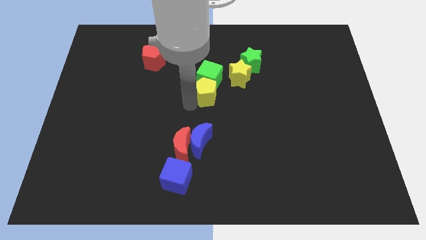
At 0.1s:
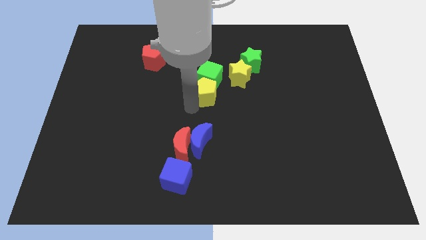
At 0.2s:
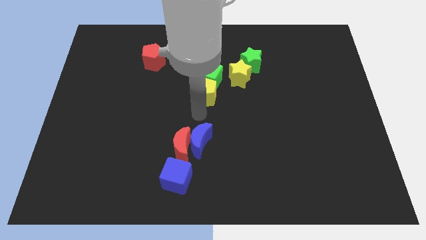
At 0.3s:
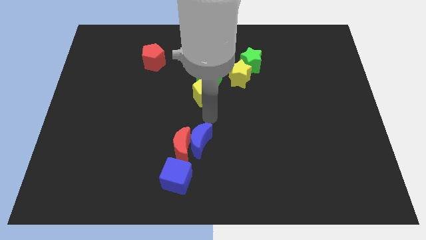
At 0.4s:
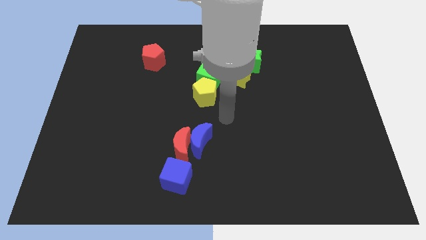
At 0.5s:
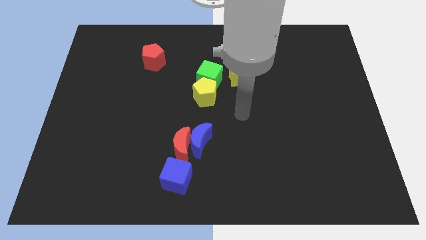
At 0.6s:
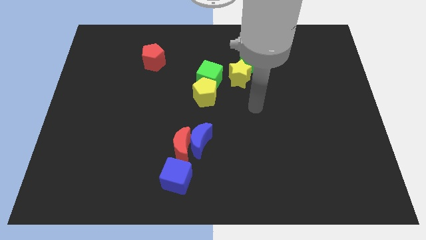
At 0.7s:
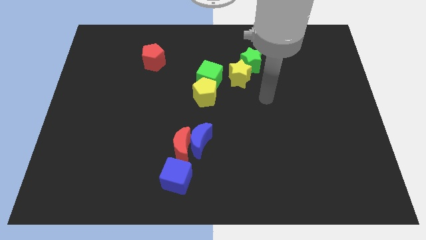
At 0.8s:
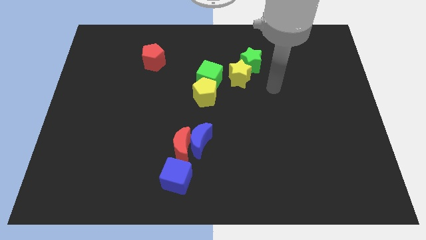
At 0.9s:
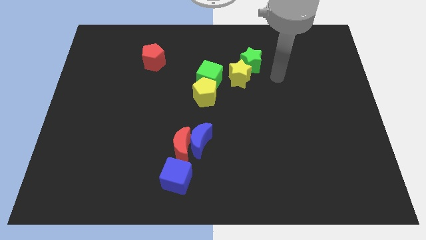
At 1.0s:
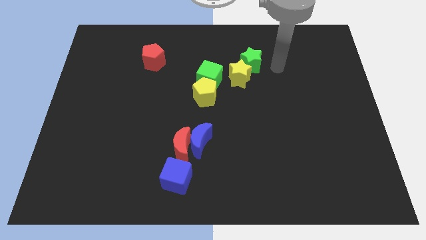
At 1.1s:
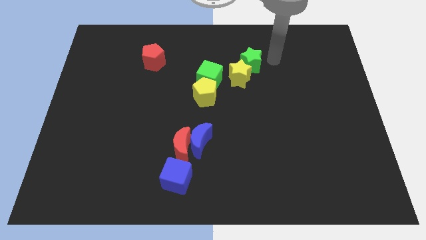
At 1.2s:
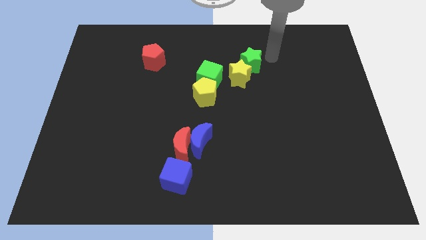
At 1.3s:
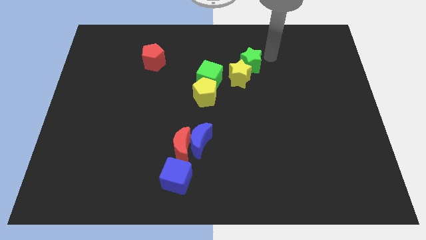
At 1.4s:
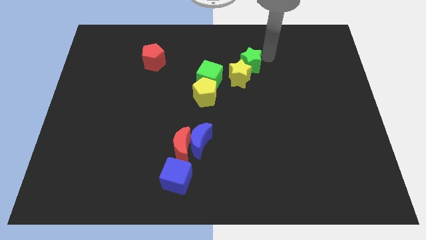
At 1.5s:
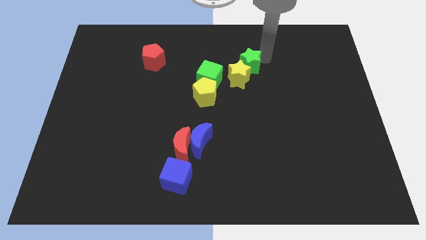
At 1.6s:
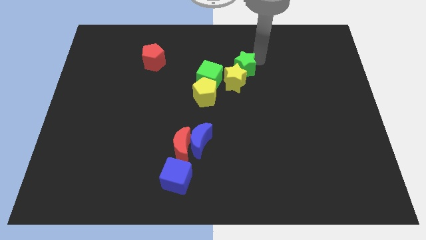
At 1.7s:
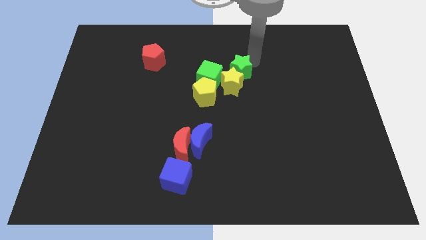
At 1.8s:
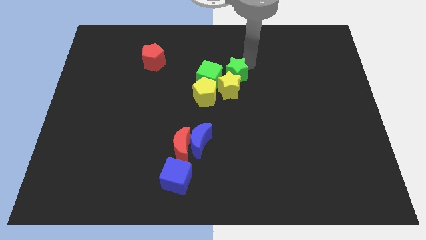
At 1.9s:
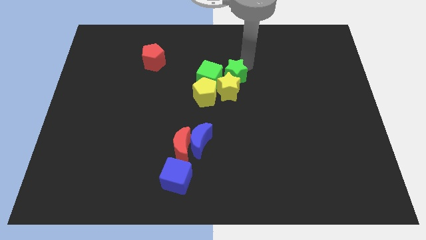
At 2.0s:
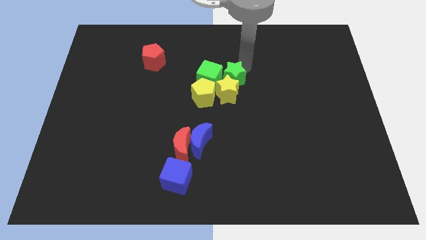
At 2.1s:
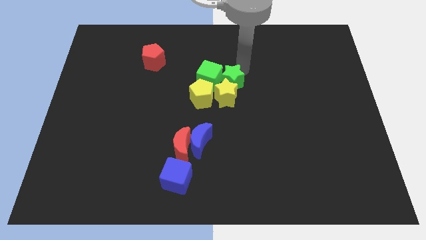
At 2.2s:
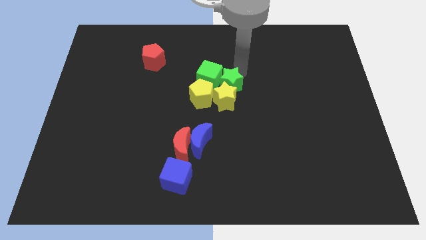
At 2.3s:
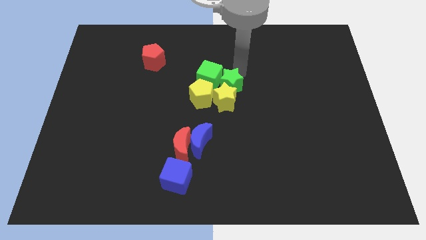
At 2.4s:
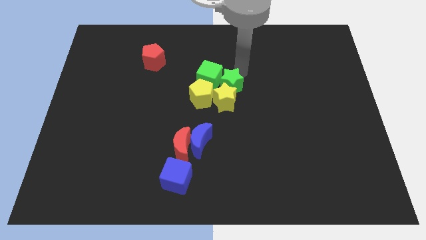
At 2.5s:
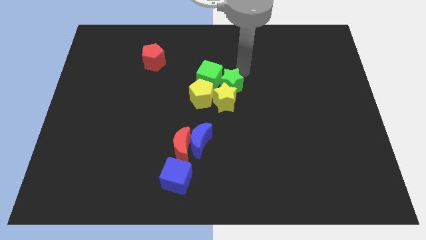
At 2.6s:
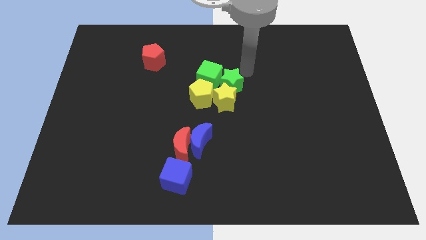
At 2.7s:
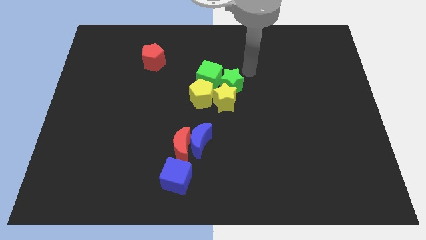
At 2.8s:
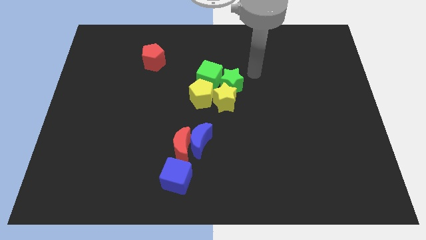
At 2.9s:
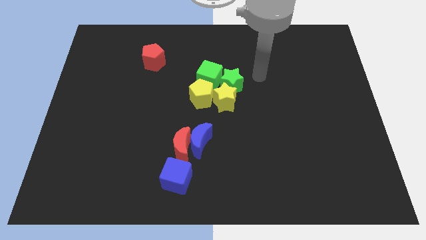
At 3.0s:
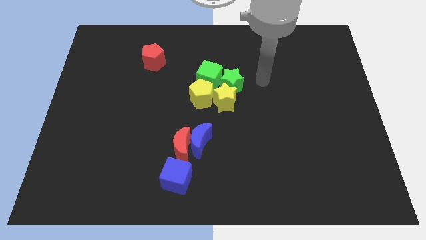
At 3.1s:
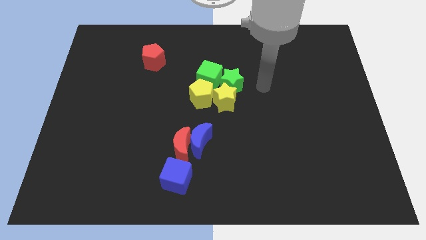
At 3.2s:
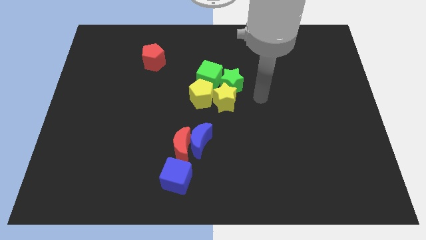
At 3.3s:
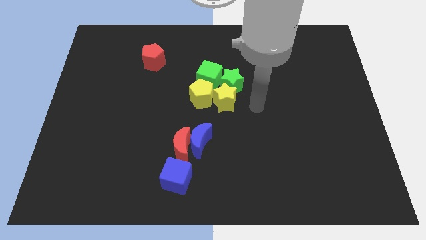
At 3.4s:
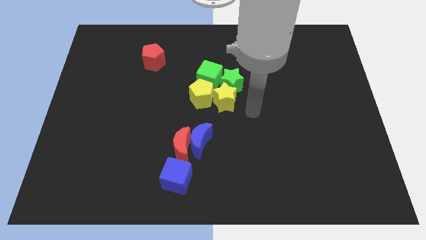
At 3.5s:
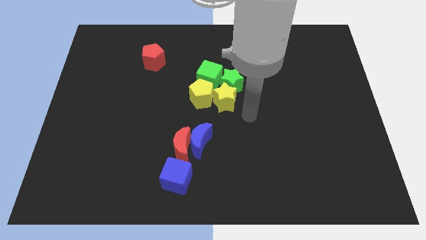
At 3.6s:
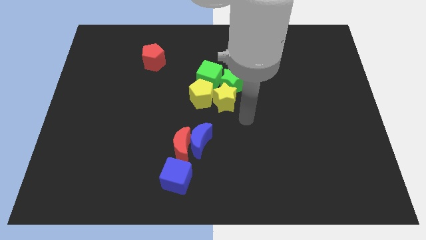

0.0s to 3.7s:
move the yellow star and green star to the right side of the yellow pentagon and green cube

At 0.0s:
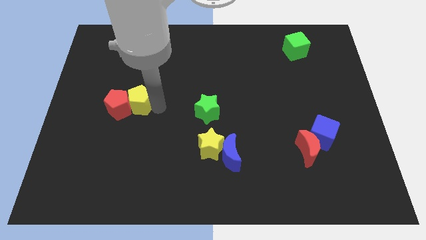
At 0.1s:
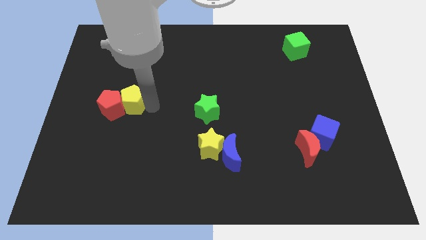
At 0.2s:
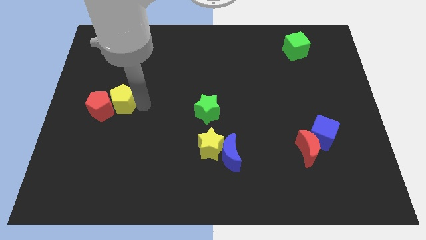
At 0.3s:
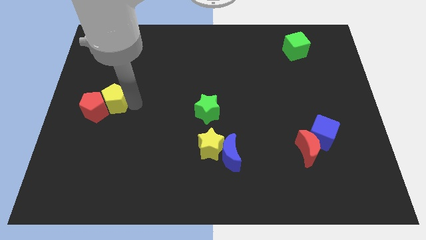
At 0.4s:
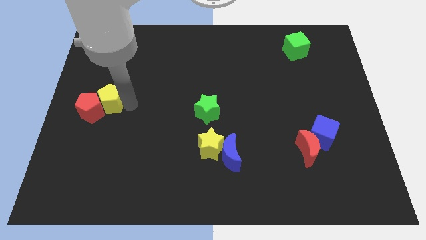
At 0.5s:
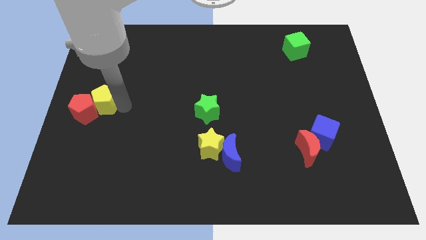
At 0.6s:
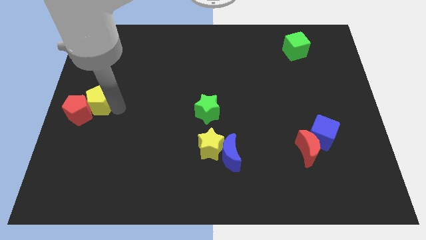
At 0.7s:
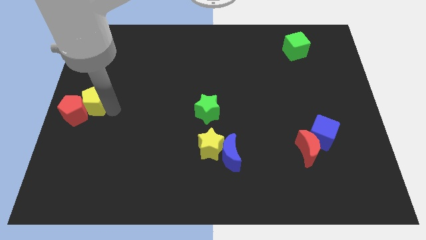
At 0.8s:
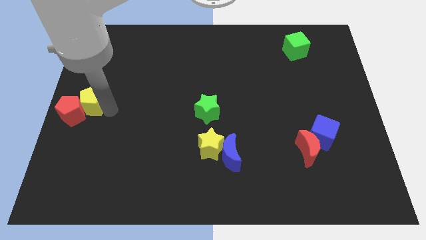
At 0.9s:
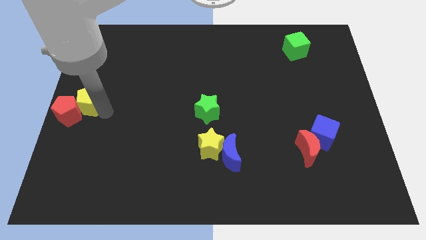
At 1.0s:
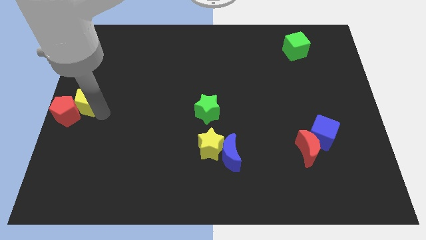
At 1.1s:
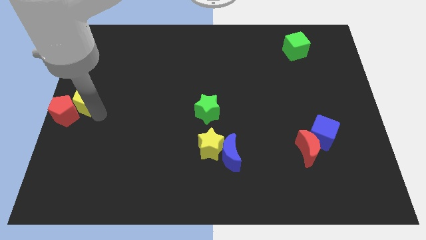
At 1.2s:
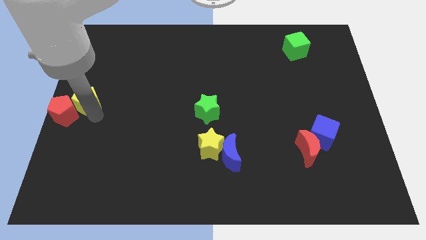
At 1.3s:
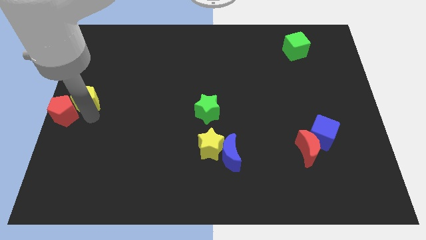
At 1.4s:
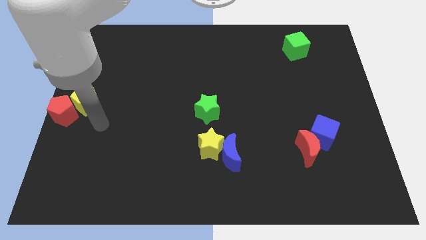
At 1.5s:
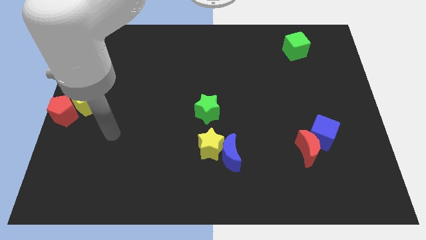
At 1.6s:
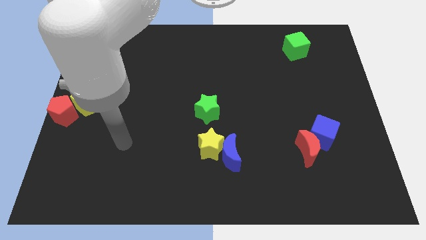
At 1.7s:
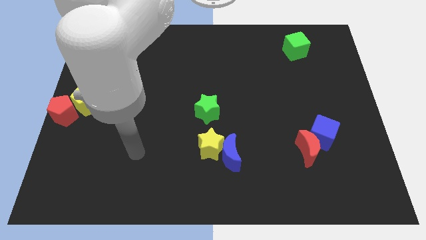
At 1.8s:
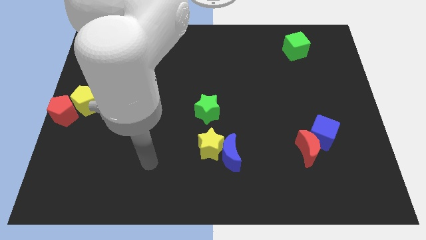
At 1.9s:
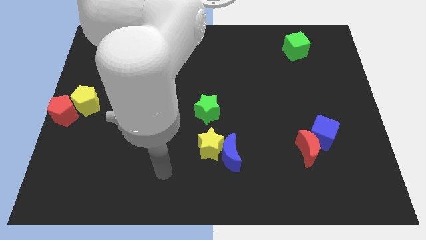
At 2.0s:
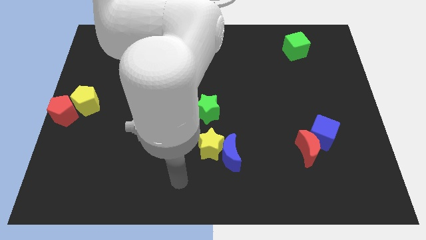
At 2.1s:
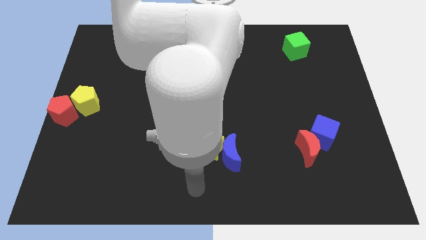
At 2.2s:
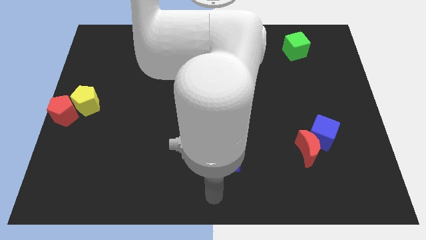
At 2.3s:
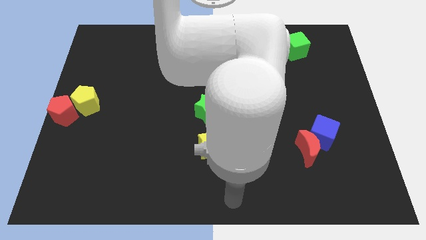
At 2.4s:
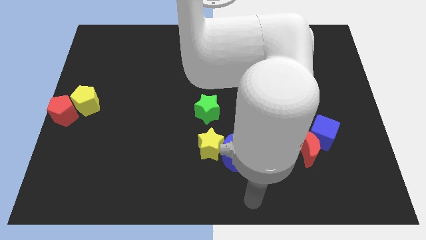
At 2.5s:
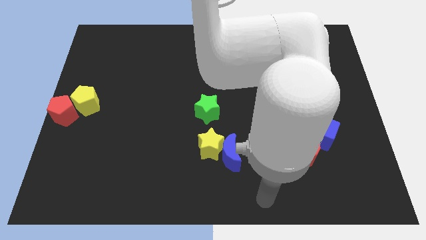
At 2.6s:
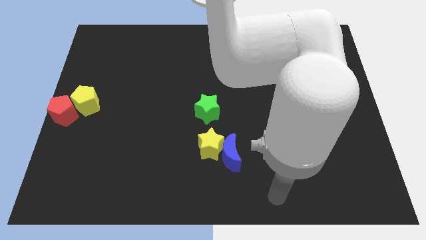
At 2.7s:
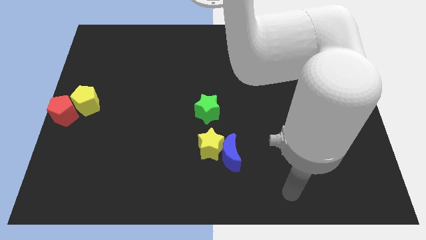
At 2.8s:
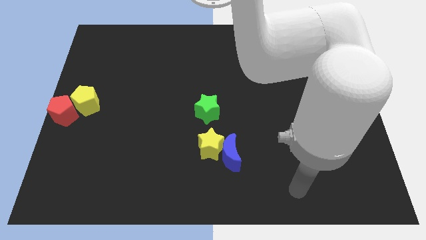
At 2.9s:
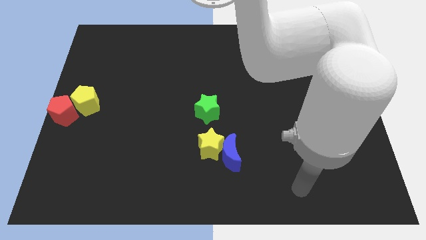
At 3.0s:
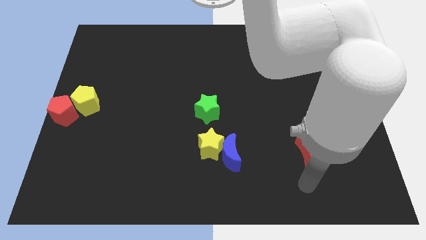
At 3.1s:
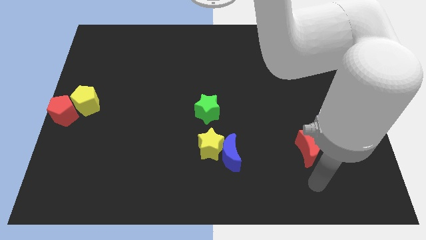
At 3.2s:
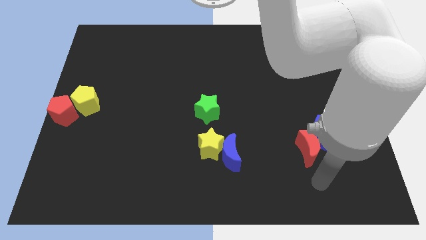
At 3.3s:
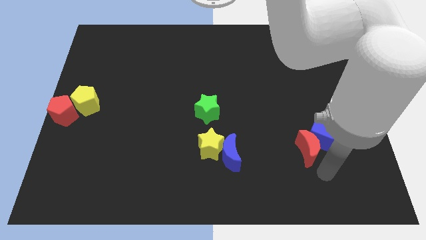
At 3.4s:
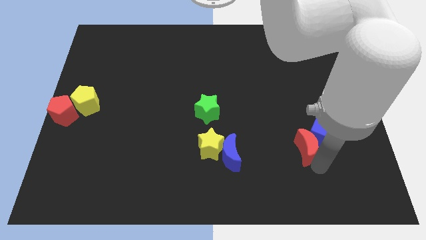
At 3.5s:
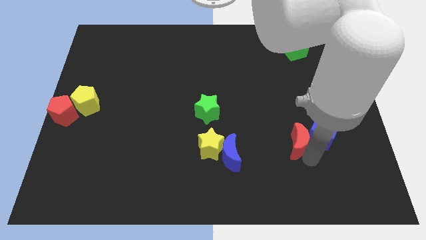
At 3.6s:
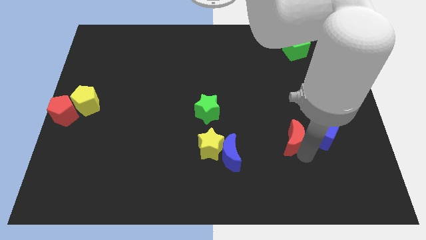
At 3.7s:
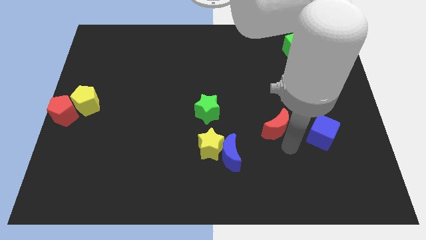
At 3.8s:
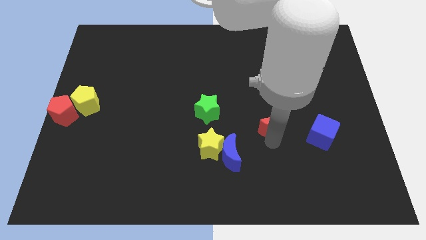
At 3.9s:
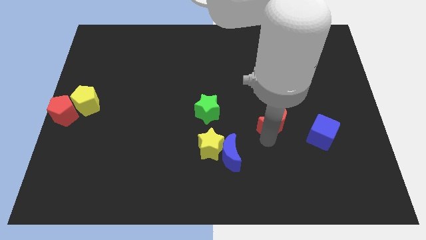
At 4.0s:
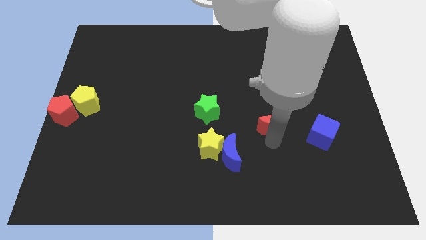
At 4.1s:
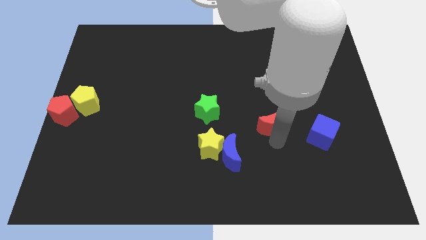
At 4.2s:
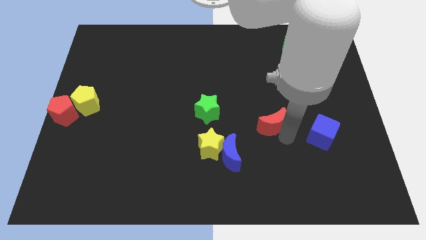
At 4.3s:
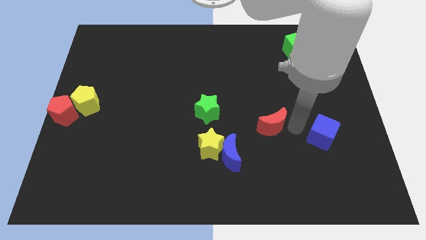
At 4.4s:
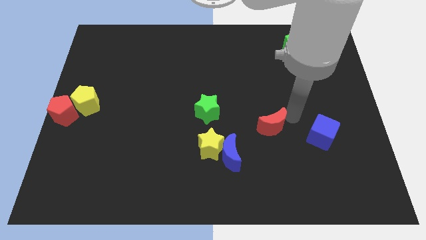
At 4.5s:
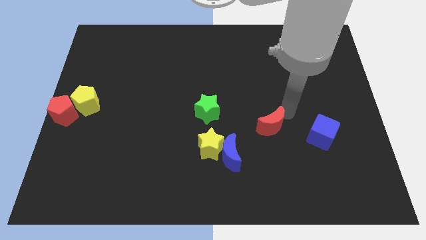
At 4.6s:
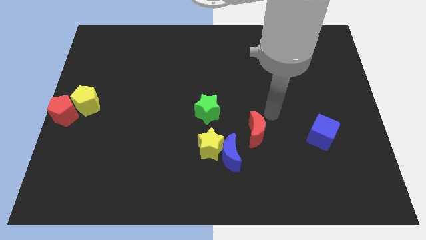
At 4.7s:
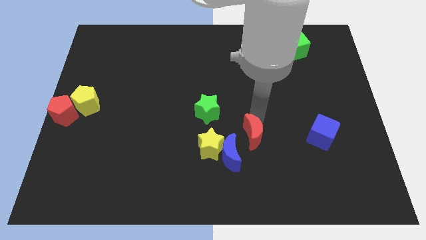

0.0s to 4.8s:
separate the red moon from the blue cube

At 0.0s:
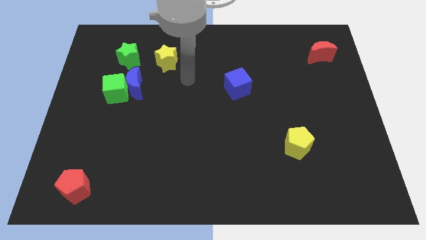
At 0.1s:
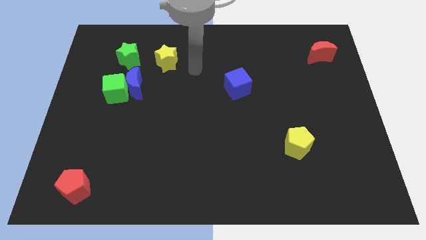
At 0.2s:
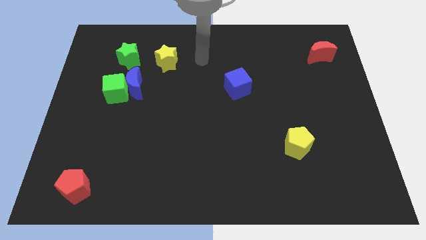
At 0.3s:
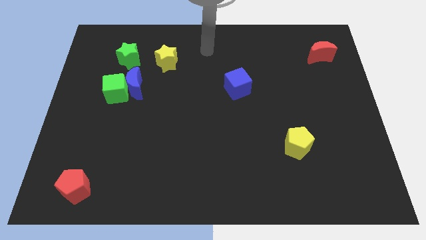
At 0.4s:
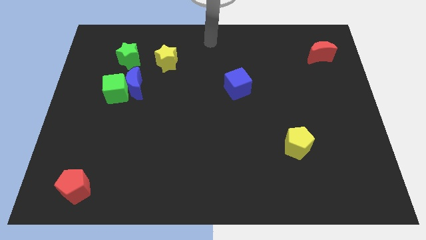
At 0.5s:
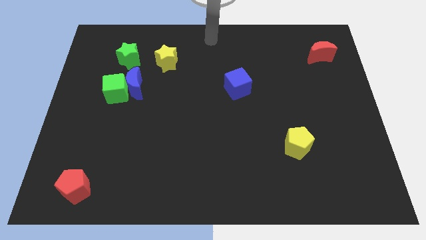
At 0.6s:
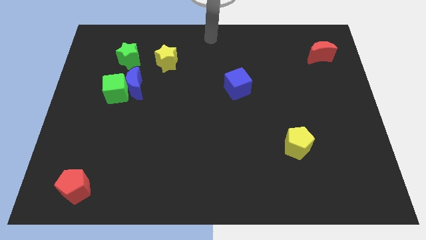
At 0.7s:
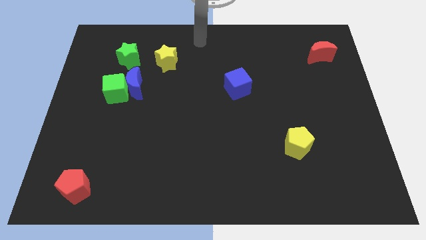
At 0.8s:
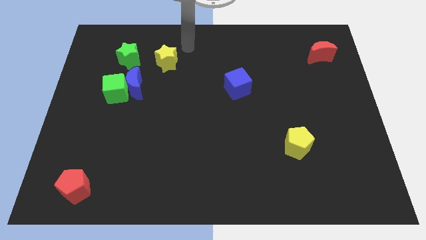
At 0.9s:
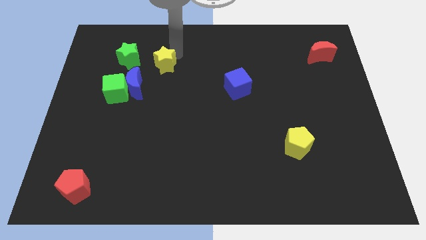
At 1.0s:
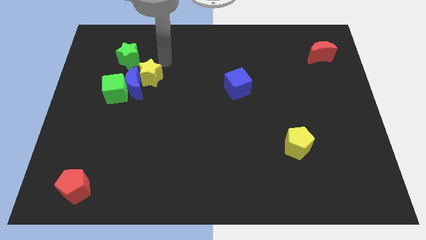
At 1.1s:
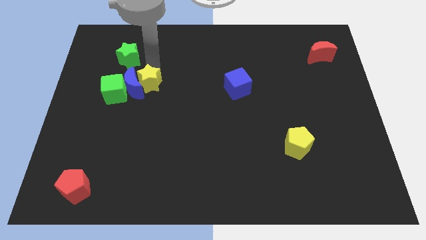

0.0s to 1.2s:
push the yellow star into the blue crescent
